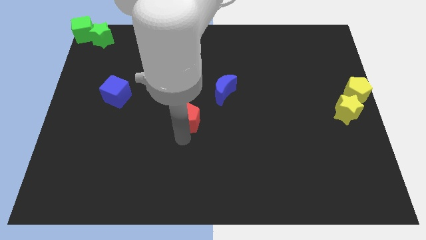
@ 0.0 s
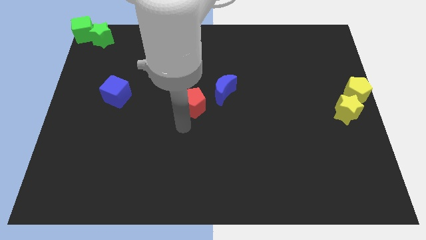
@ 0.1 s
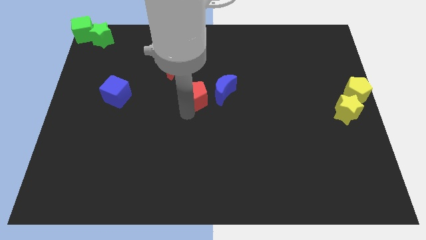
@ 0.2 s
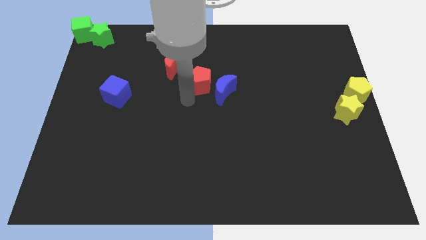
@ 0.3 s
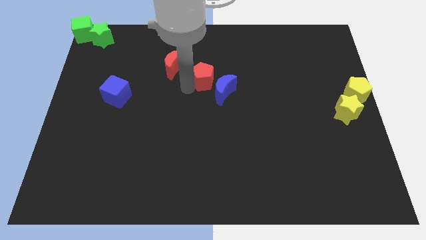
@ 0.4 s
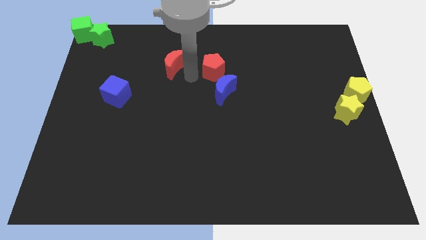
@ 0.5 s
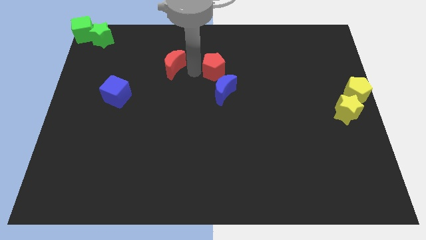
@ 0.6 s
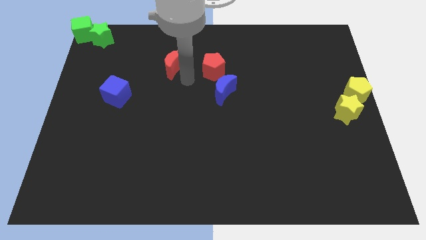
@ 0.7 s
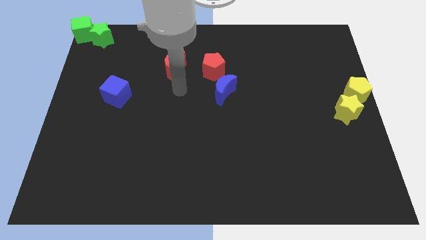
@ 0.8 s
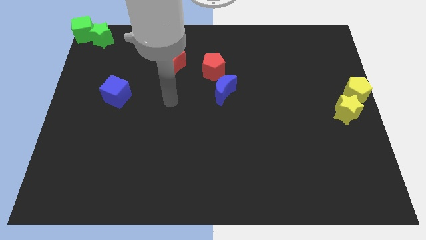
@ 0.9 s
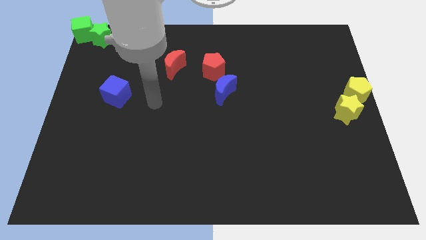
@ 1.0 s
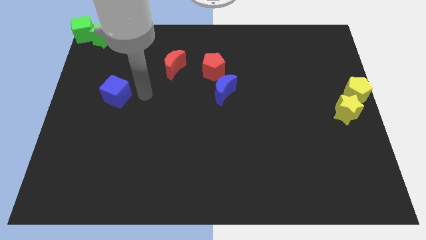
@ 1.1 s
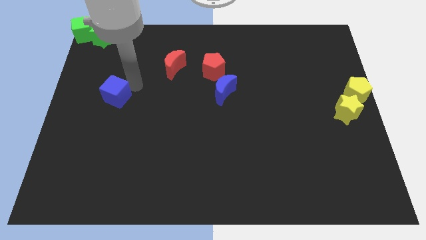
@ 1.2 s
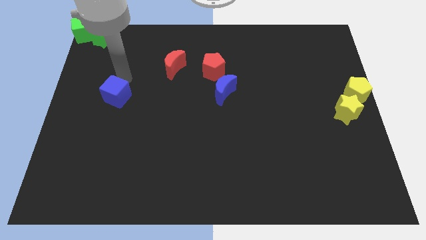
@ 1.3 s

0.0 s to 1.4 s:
push the red pentagon slightly towards the blue moon

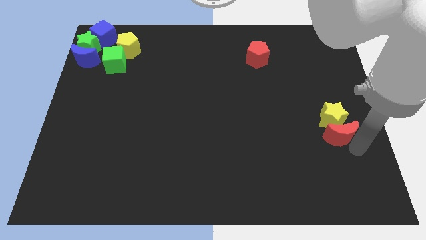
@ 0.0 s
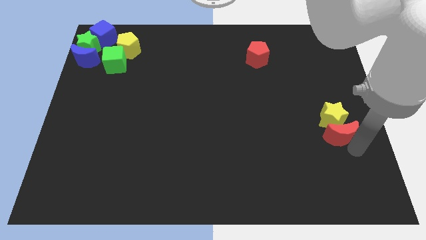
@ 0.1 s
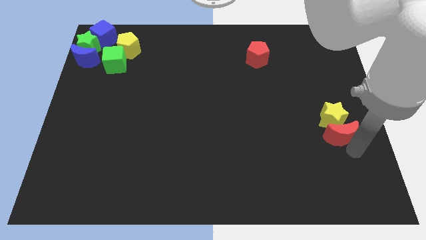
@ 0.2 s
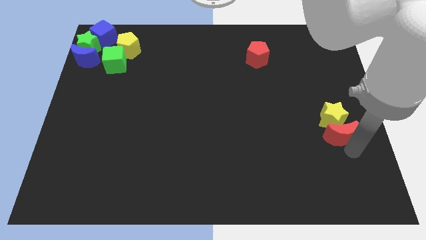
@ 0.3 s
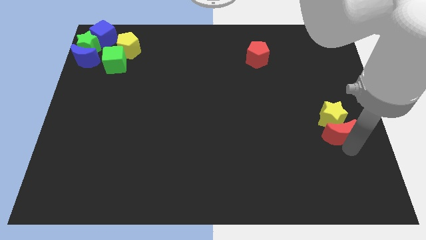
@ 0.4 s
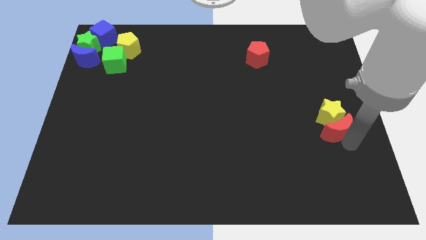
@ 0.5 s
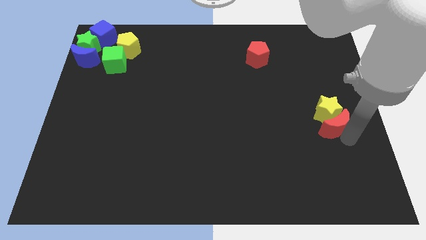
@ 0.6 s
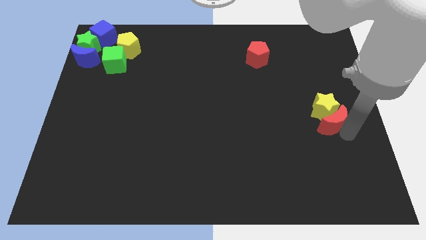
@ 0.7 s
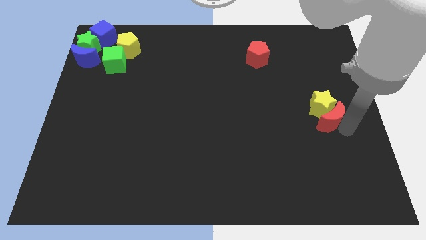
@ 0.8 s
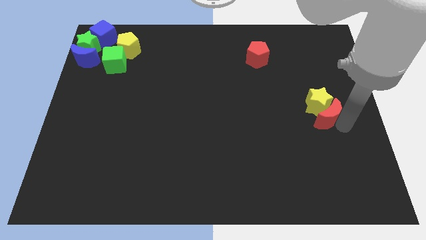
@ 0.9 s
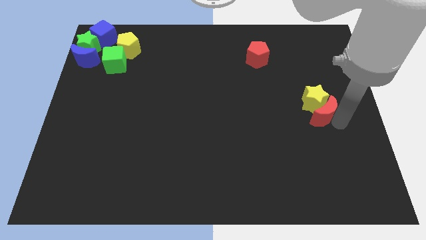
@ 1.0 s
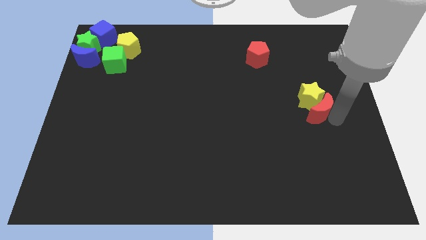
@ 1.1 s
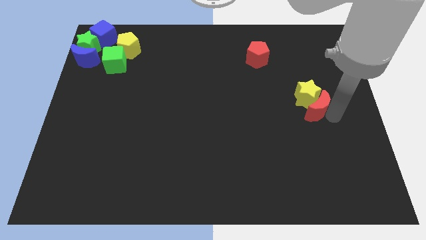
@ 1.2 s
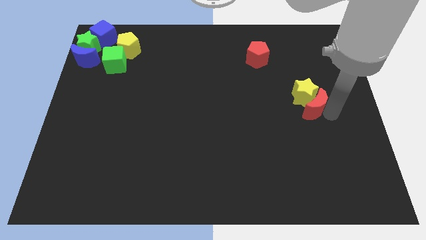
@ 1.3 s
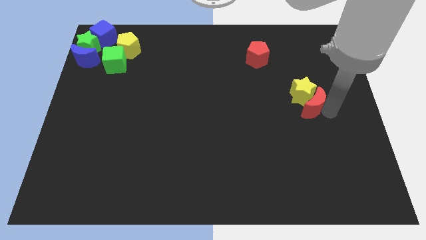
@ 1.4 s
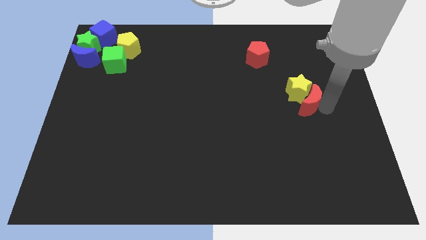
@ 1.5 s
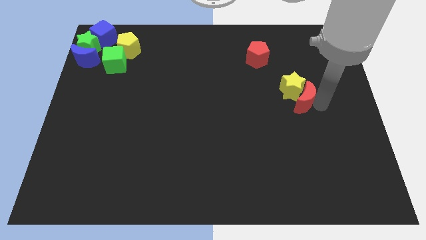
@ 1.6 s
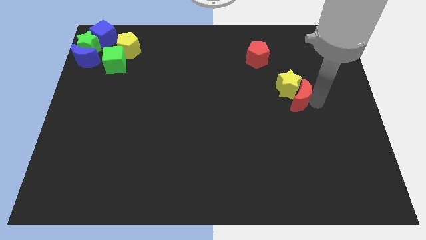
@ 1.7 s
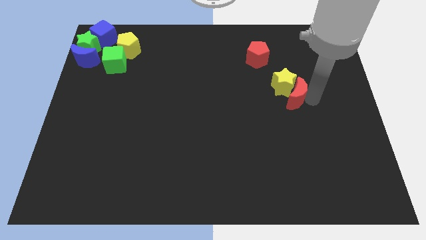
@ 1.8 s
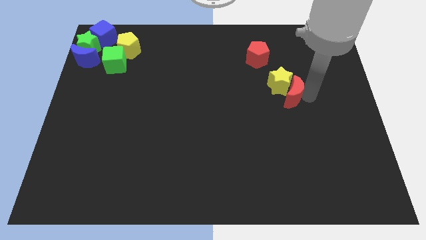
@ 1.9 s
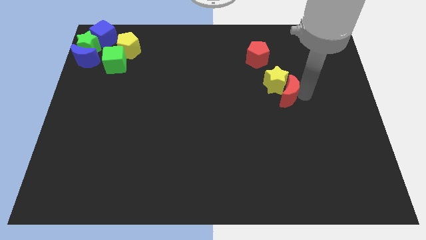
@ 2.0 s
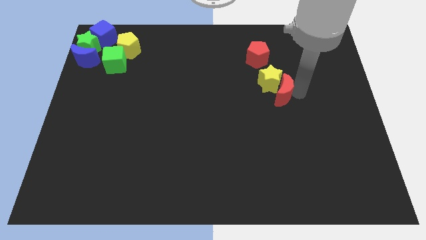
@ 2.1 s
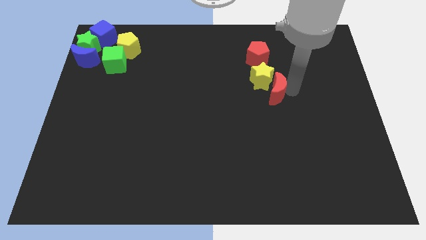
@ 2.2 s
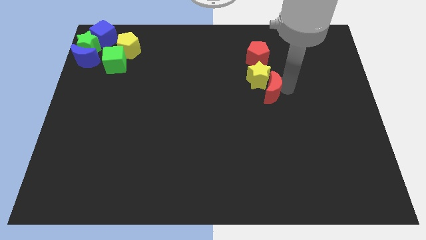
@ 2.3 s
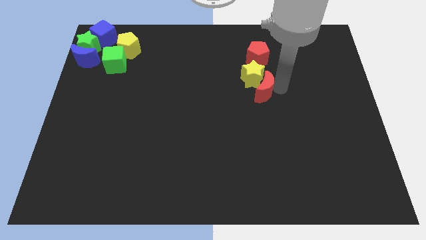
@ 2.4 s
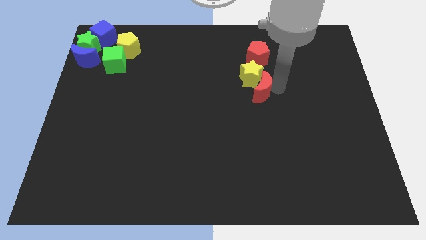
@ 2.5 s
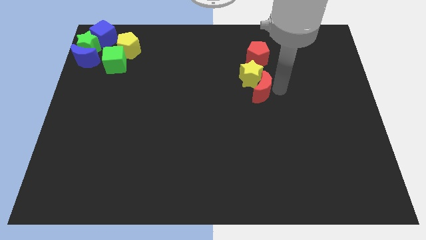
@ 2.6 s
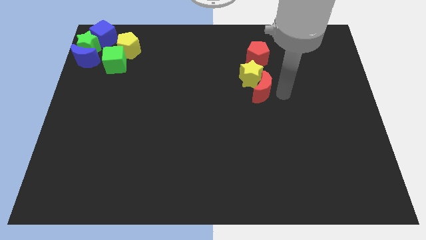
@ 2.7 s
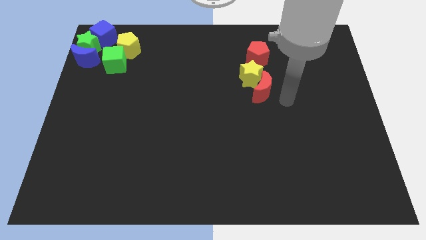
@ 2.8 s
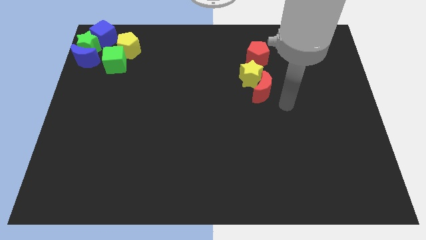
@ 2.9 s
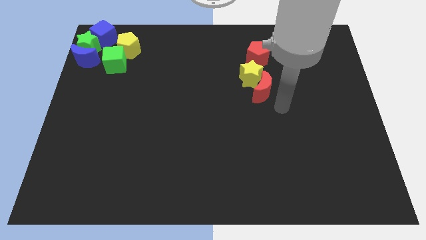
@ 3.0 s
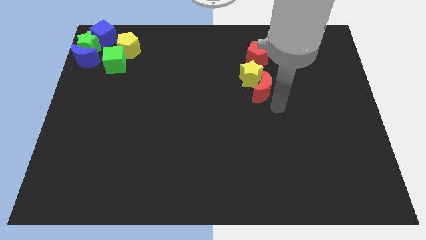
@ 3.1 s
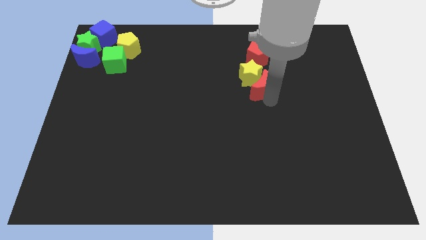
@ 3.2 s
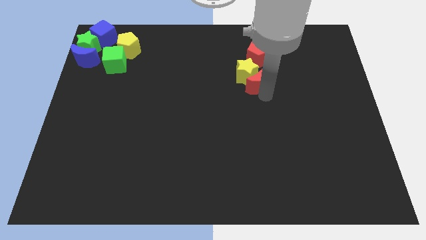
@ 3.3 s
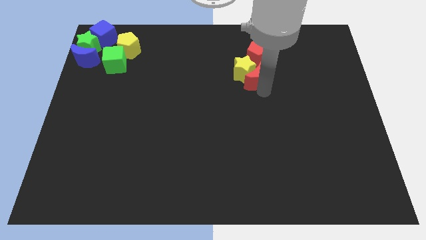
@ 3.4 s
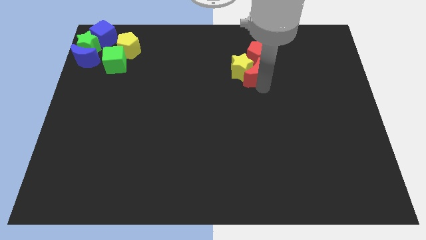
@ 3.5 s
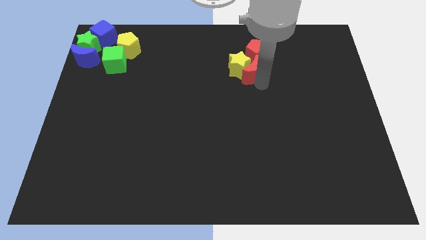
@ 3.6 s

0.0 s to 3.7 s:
push the red moon and yellow star towards the red pentagon

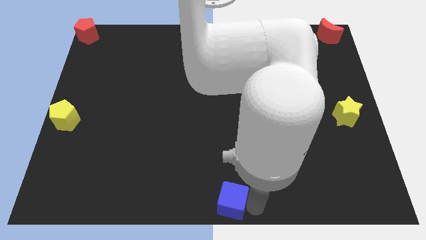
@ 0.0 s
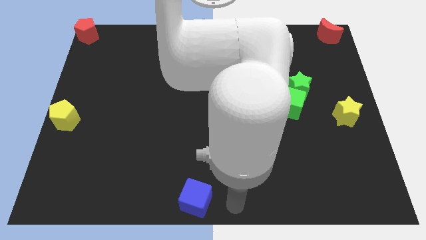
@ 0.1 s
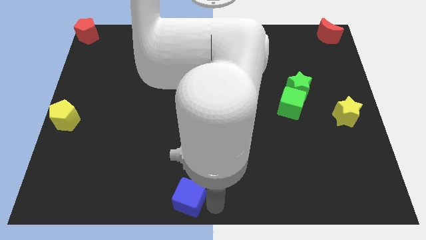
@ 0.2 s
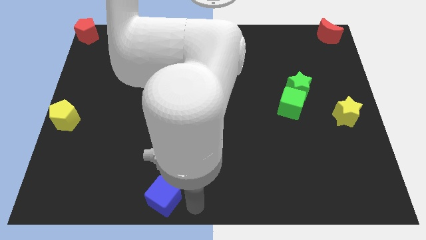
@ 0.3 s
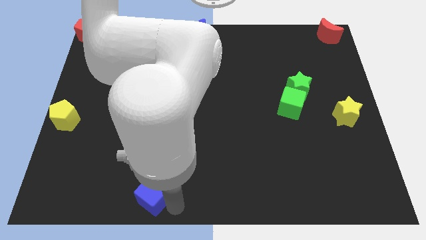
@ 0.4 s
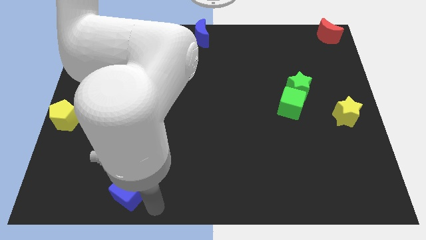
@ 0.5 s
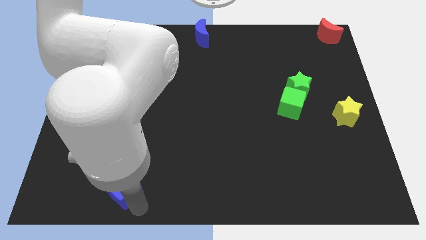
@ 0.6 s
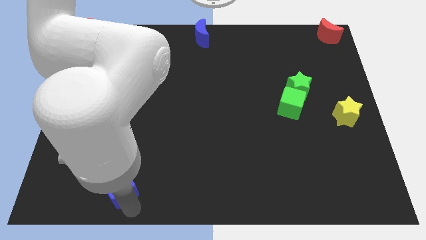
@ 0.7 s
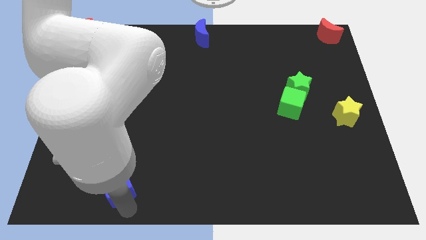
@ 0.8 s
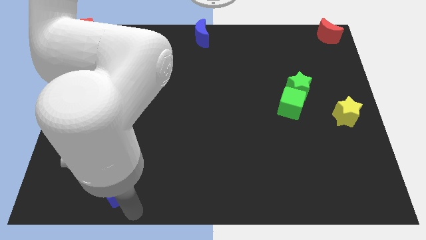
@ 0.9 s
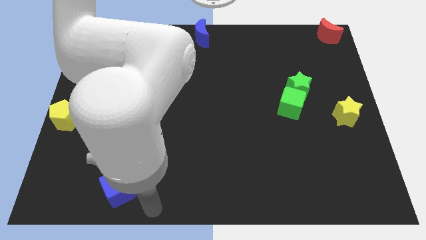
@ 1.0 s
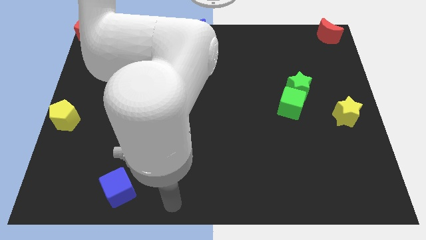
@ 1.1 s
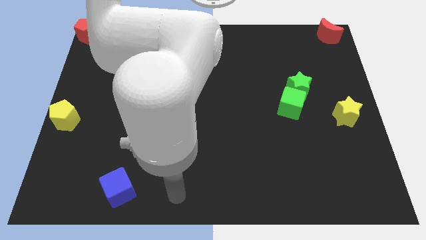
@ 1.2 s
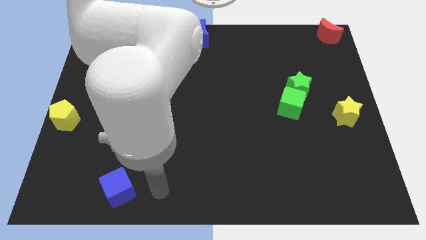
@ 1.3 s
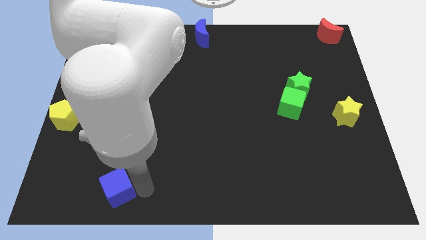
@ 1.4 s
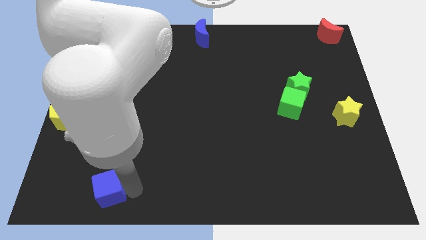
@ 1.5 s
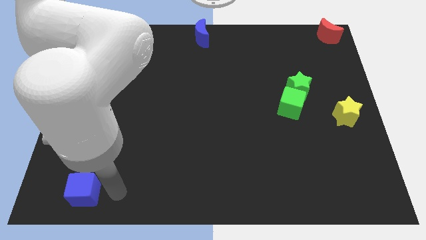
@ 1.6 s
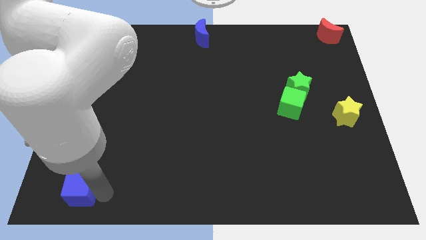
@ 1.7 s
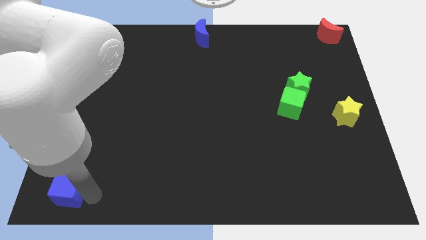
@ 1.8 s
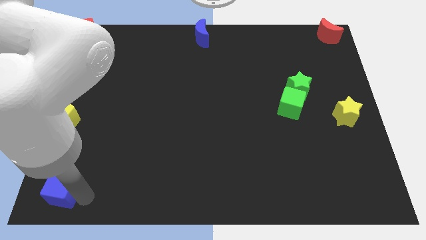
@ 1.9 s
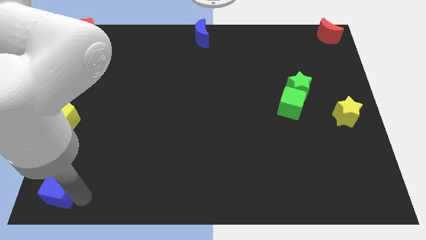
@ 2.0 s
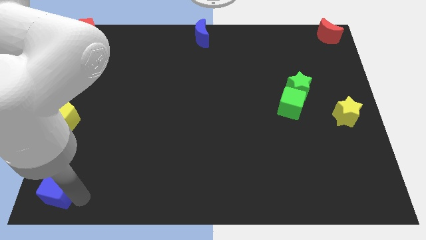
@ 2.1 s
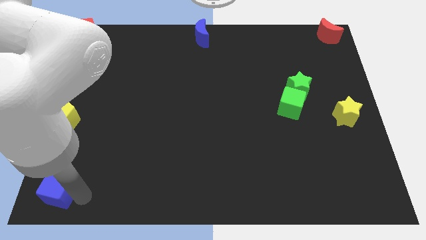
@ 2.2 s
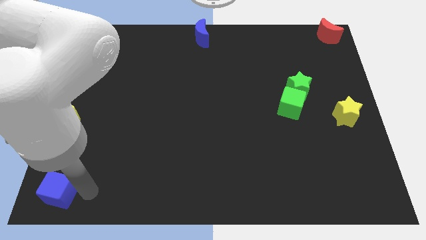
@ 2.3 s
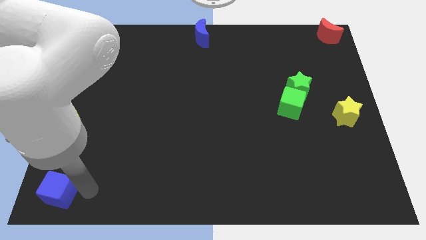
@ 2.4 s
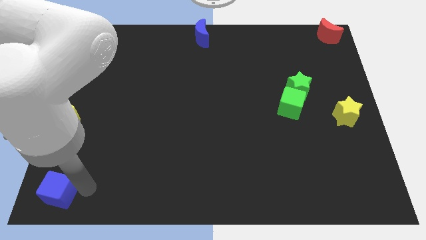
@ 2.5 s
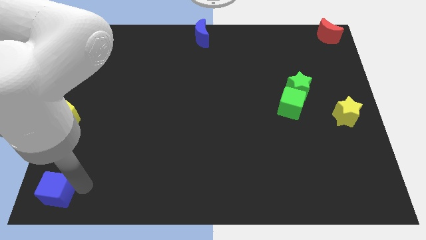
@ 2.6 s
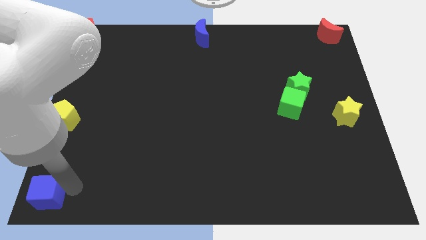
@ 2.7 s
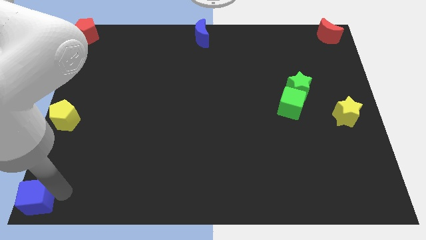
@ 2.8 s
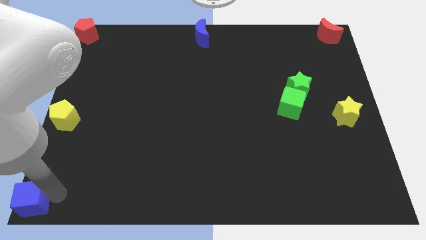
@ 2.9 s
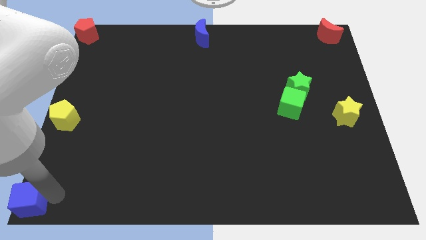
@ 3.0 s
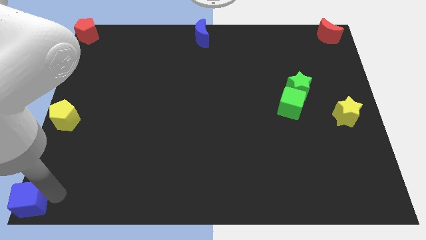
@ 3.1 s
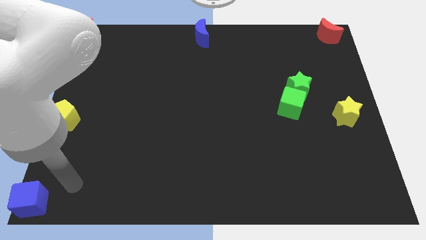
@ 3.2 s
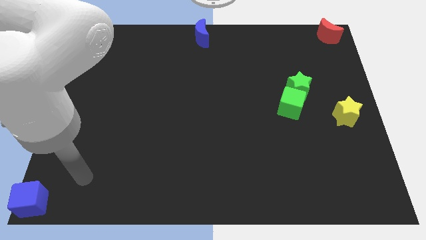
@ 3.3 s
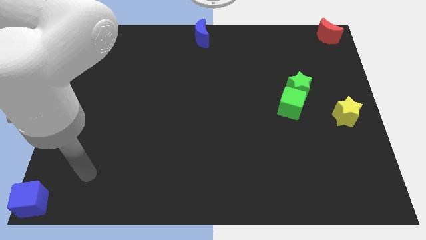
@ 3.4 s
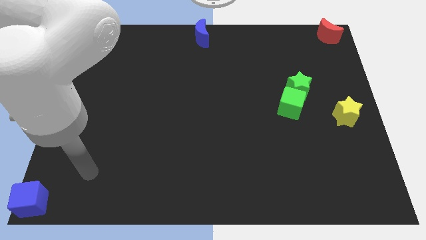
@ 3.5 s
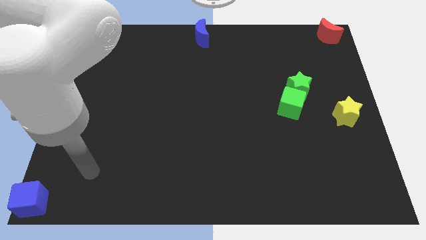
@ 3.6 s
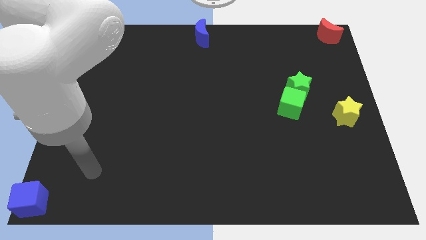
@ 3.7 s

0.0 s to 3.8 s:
slide the blue cube towards the bottom left corner of the board
